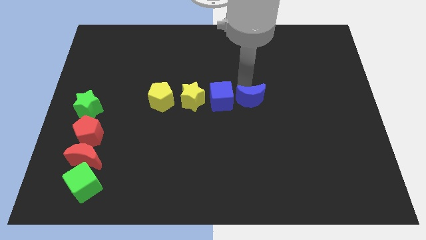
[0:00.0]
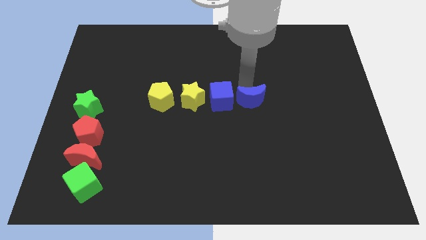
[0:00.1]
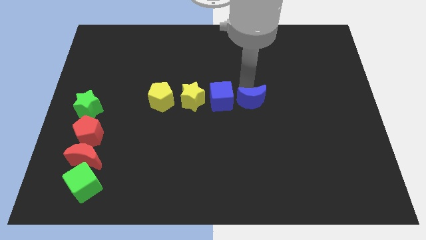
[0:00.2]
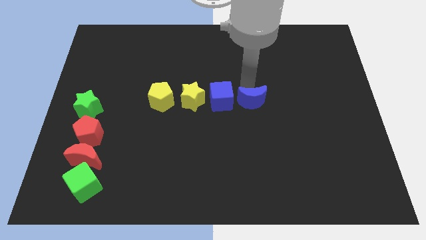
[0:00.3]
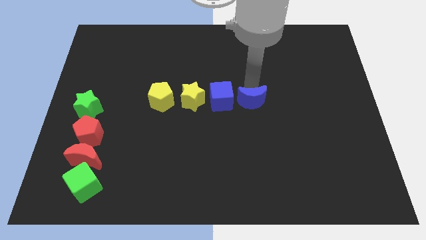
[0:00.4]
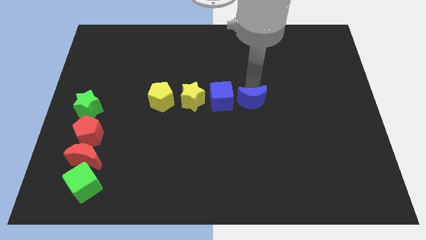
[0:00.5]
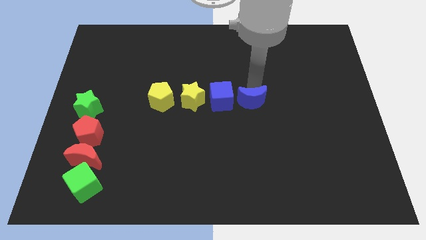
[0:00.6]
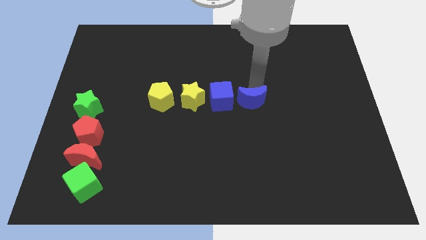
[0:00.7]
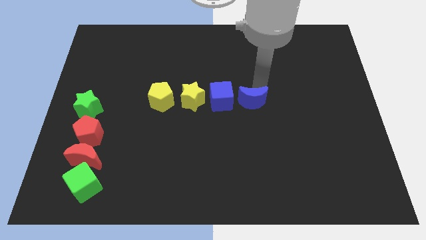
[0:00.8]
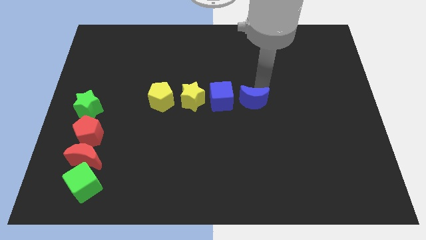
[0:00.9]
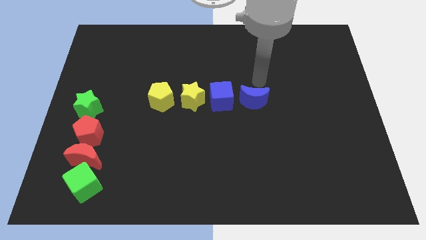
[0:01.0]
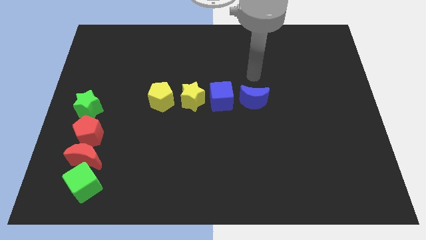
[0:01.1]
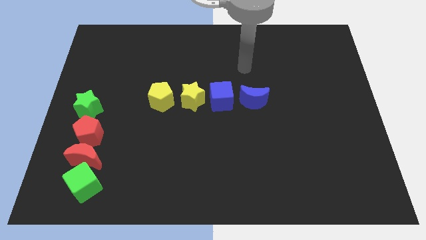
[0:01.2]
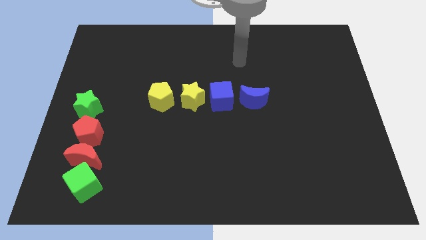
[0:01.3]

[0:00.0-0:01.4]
move the blue crescent slightly towards down

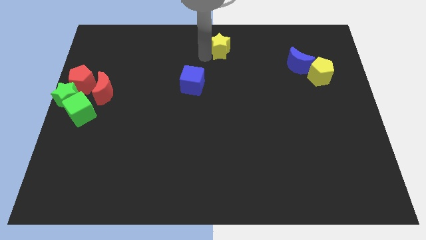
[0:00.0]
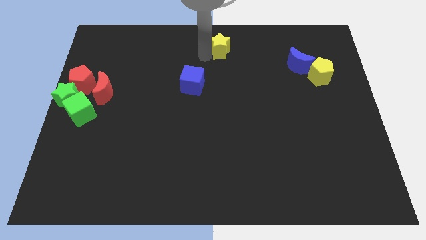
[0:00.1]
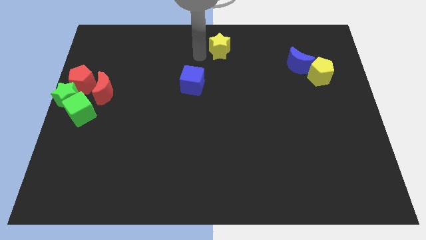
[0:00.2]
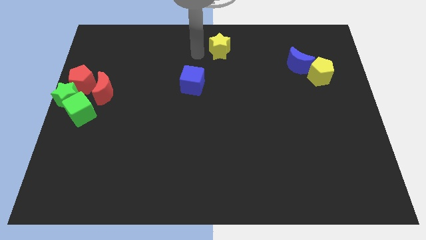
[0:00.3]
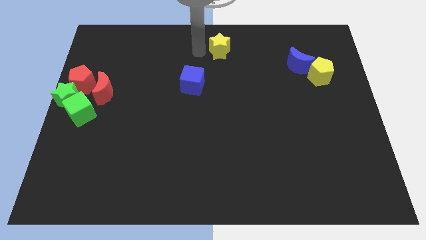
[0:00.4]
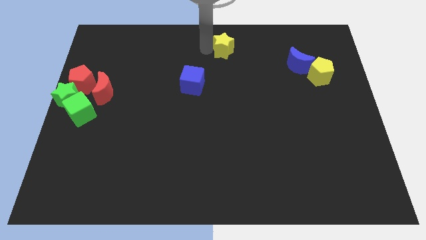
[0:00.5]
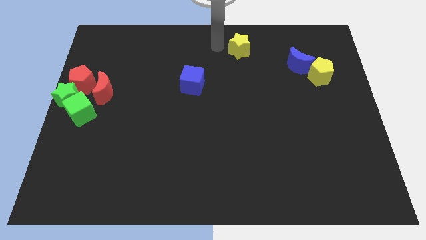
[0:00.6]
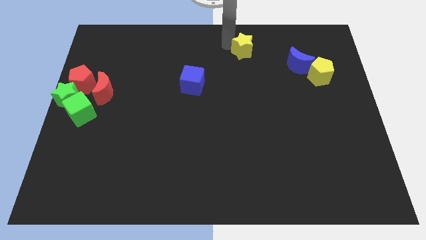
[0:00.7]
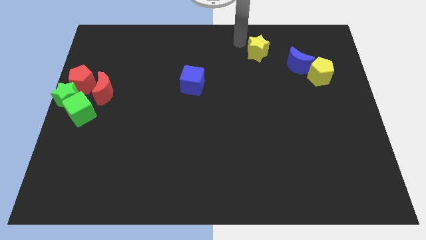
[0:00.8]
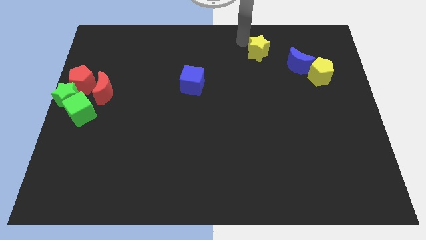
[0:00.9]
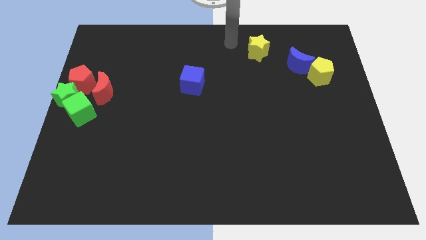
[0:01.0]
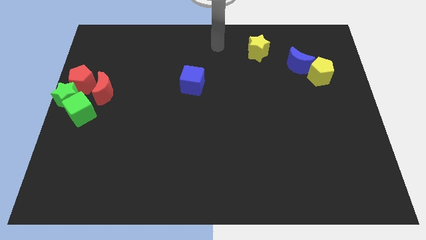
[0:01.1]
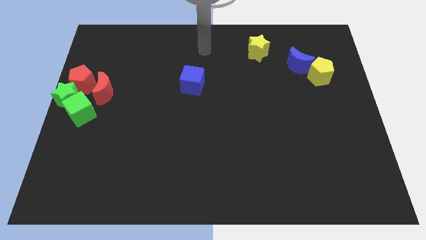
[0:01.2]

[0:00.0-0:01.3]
move the yellow star to the left of the blue moon

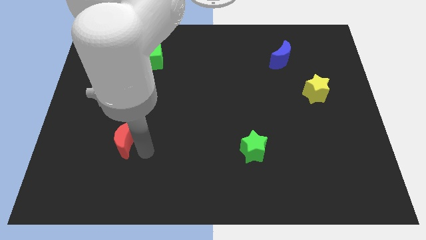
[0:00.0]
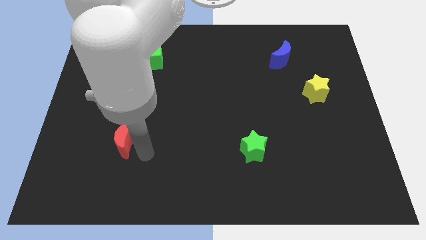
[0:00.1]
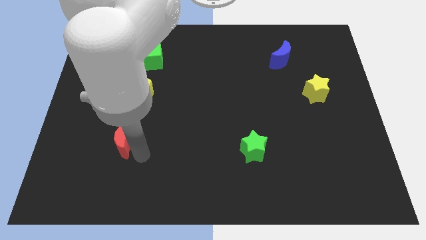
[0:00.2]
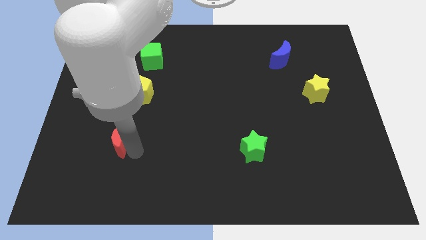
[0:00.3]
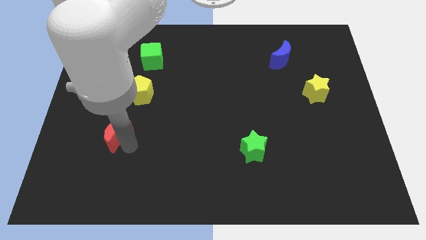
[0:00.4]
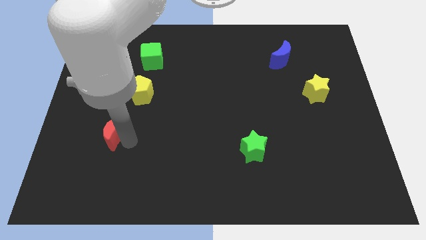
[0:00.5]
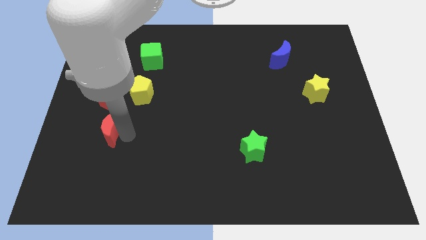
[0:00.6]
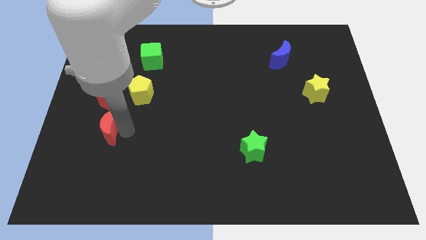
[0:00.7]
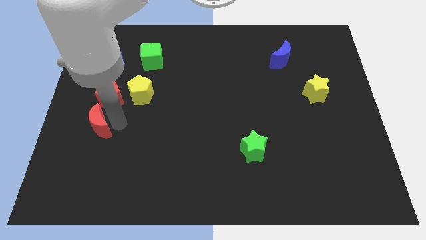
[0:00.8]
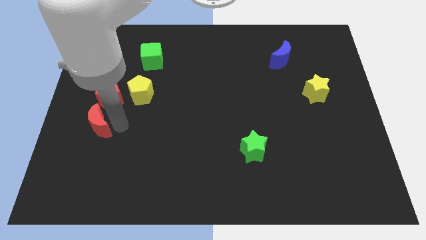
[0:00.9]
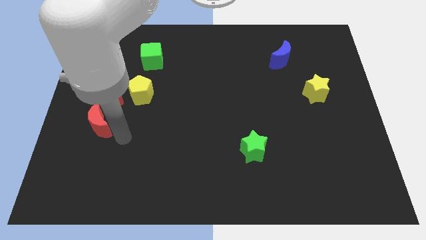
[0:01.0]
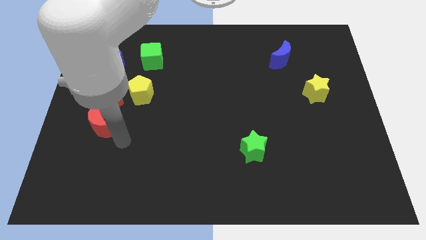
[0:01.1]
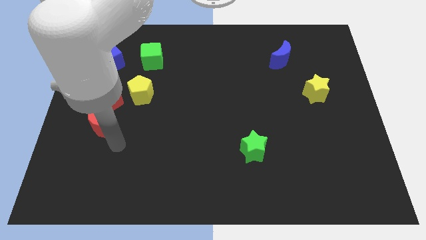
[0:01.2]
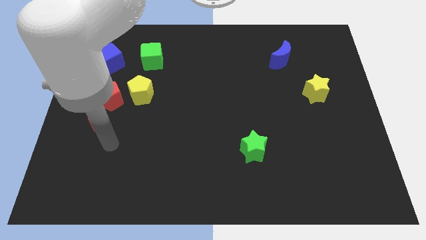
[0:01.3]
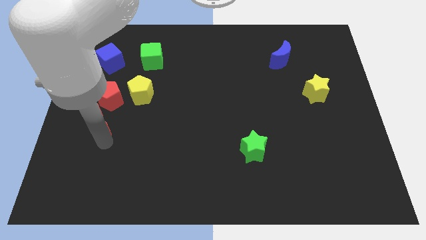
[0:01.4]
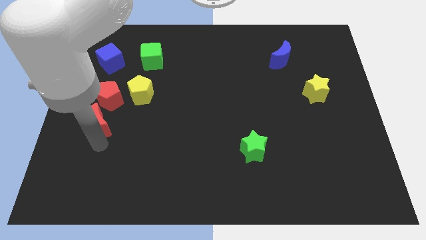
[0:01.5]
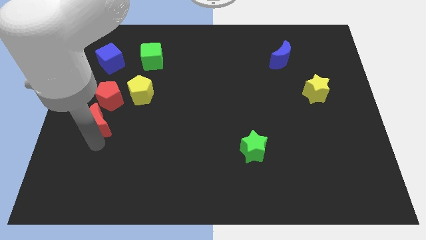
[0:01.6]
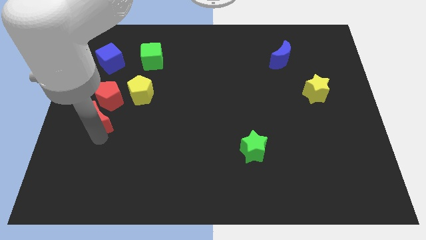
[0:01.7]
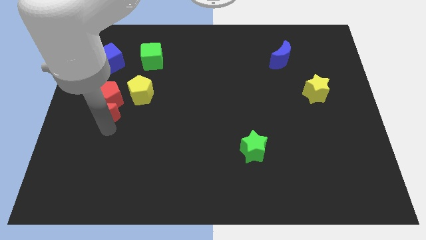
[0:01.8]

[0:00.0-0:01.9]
push the red moon into the red pentagon

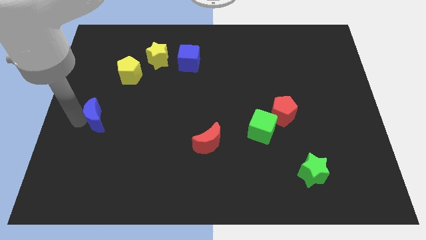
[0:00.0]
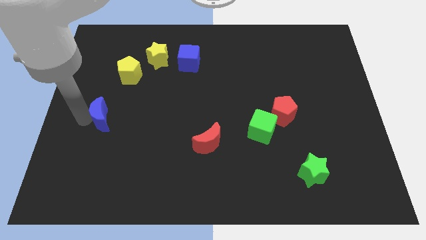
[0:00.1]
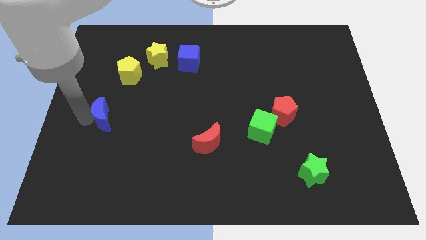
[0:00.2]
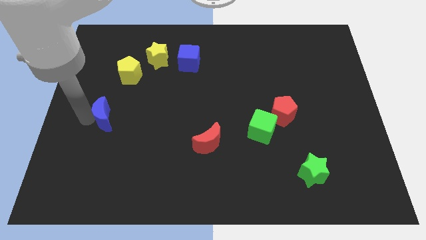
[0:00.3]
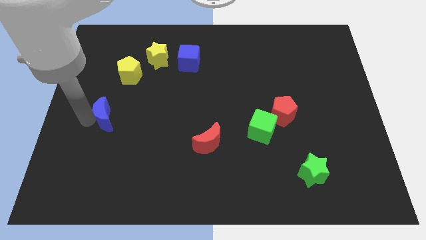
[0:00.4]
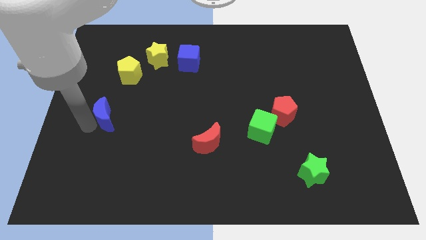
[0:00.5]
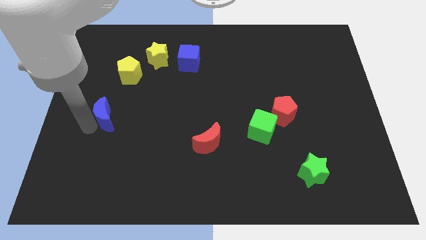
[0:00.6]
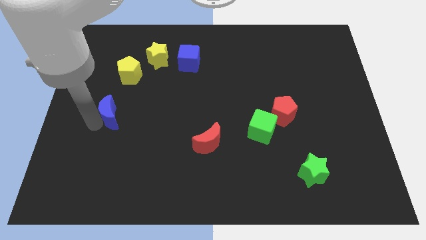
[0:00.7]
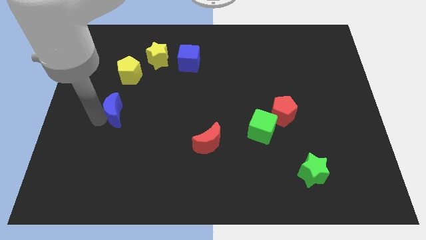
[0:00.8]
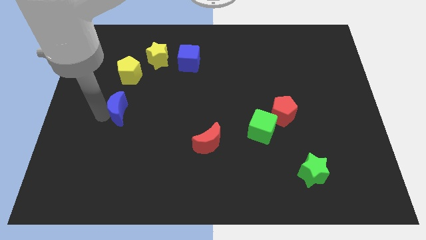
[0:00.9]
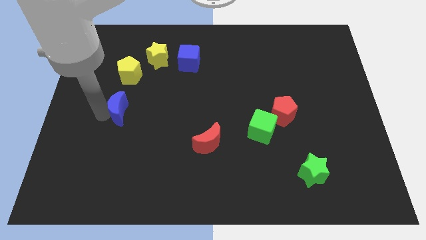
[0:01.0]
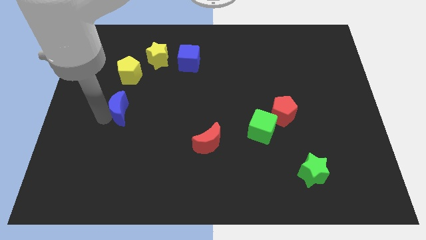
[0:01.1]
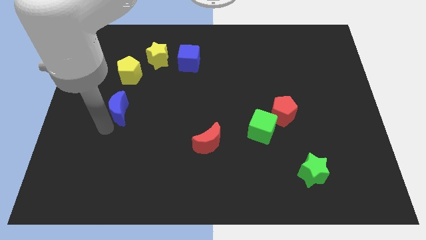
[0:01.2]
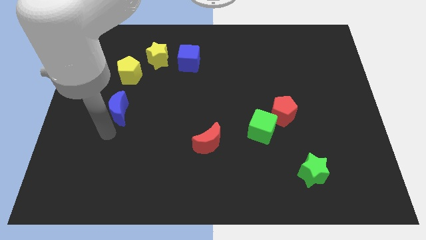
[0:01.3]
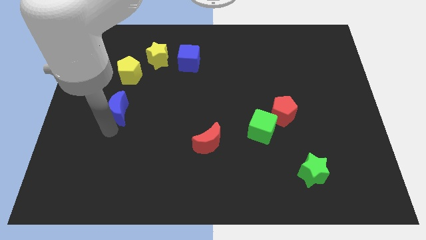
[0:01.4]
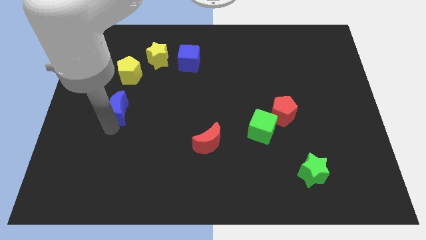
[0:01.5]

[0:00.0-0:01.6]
put the blue moon vertically below the yellow pentagon

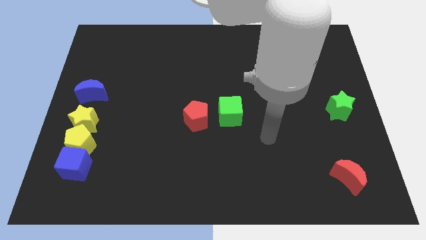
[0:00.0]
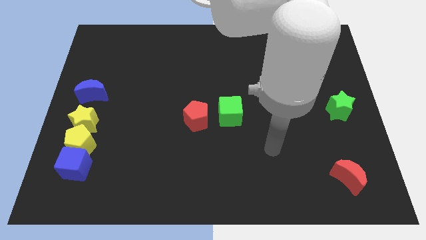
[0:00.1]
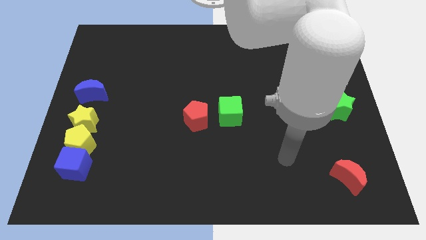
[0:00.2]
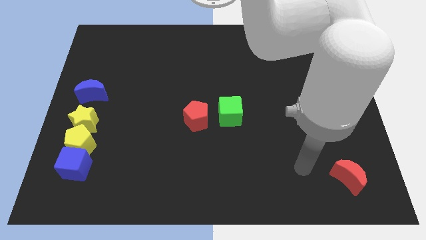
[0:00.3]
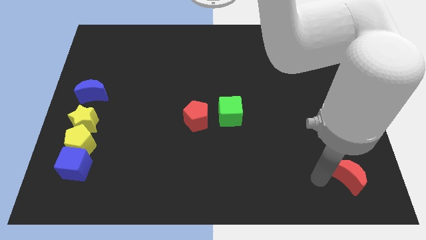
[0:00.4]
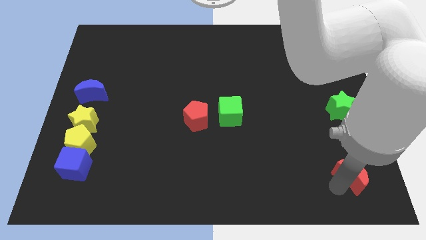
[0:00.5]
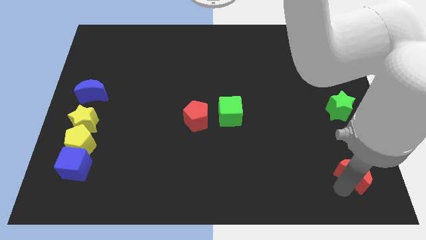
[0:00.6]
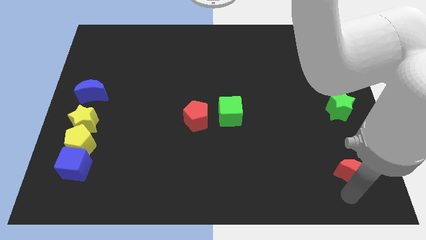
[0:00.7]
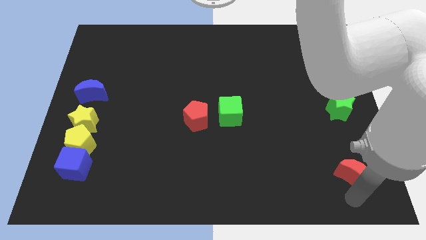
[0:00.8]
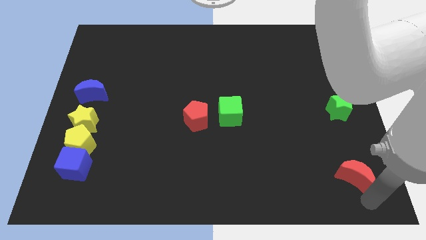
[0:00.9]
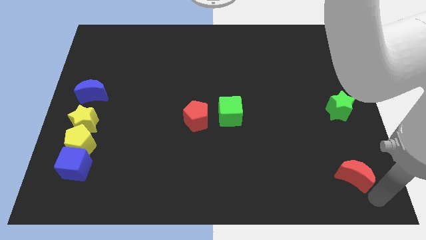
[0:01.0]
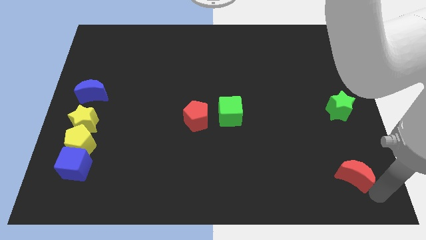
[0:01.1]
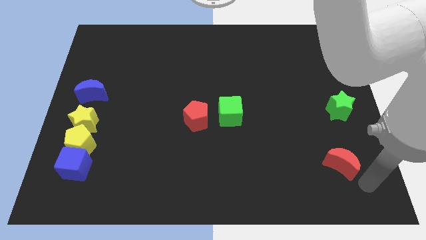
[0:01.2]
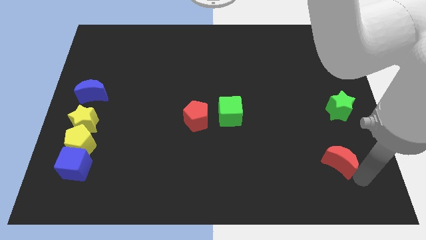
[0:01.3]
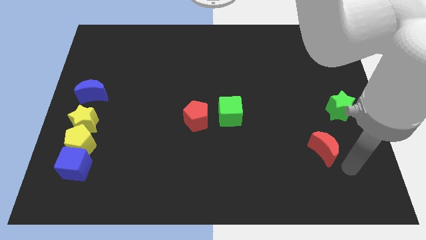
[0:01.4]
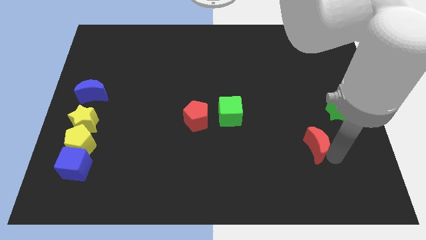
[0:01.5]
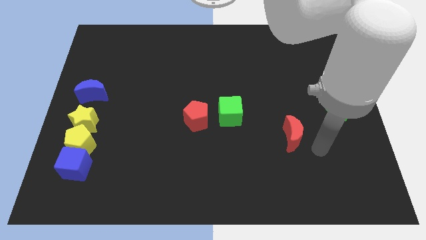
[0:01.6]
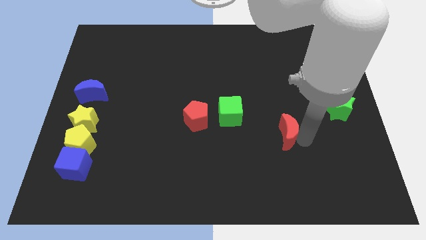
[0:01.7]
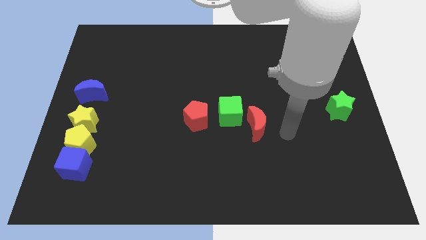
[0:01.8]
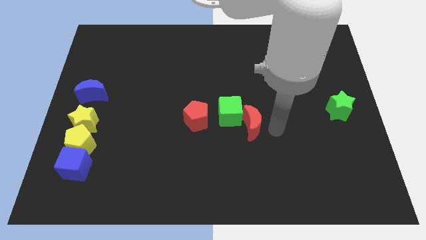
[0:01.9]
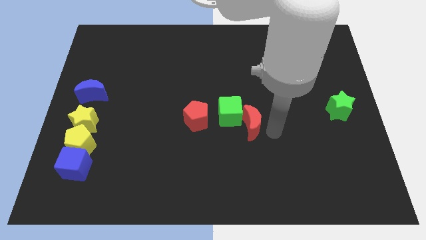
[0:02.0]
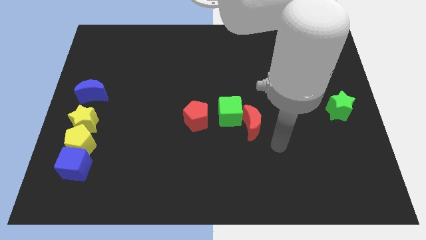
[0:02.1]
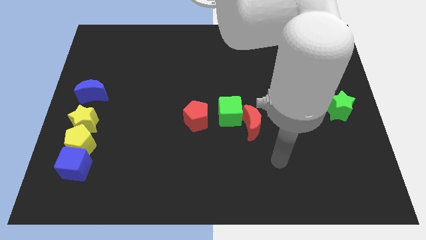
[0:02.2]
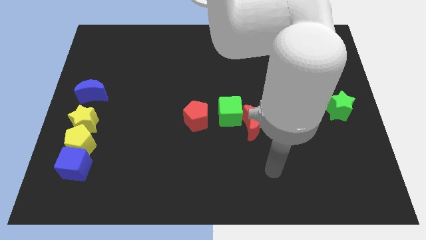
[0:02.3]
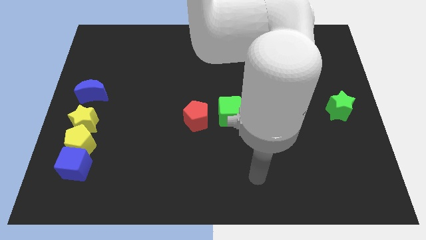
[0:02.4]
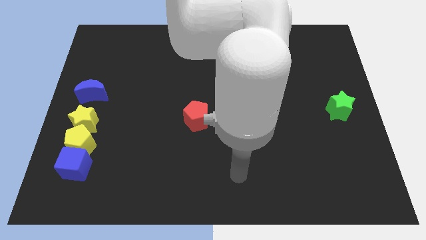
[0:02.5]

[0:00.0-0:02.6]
push the red crescent into the green cube from the right
